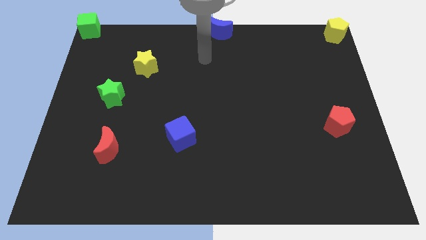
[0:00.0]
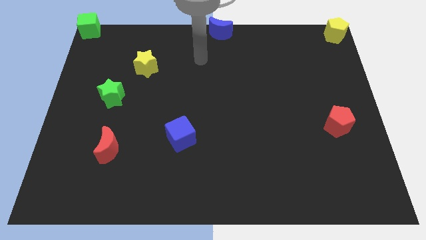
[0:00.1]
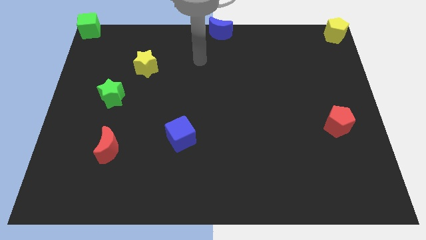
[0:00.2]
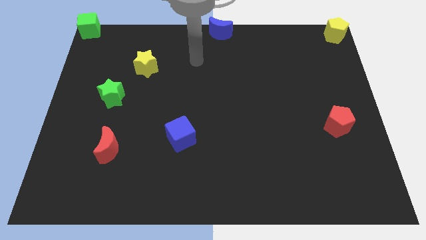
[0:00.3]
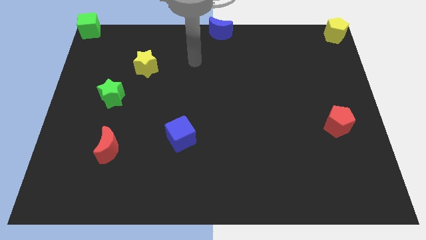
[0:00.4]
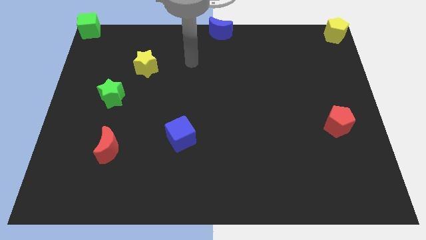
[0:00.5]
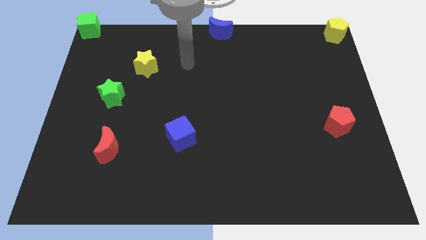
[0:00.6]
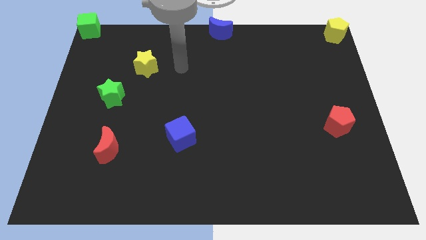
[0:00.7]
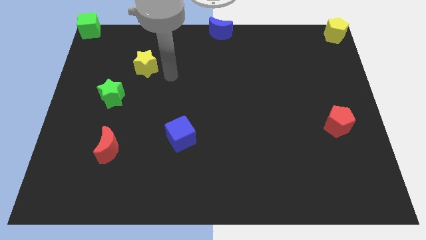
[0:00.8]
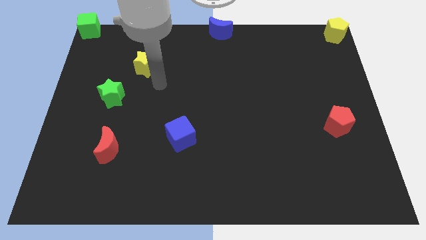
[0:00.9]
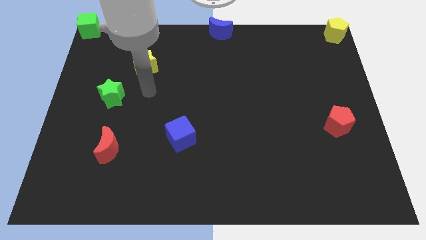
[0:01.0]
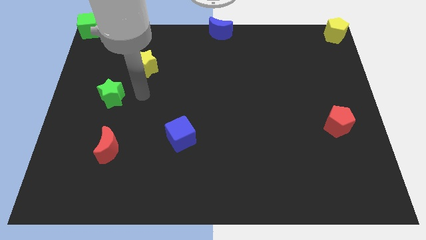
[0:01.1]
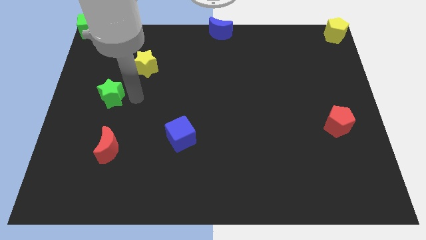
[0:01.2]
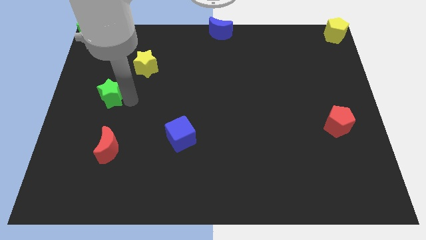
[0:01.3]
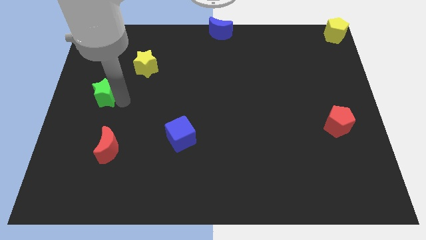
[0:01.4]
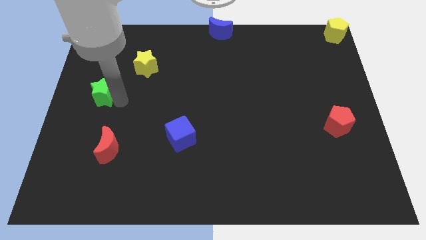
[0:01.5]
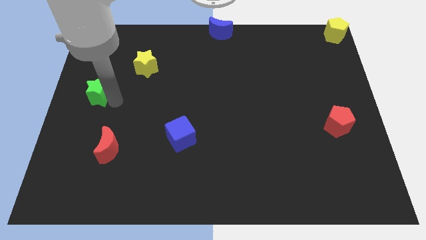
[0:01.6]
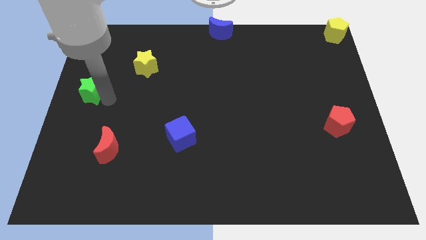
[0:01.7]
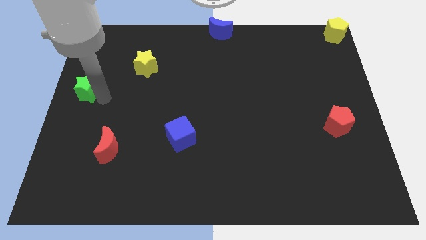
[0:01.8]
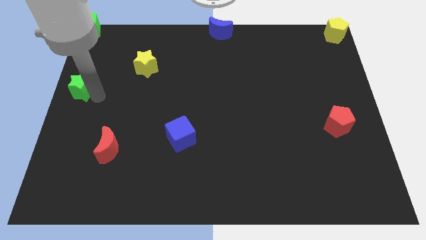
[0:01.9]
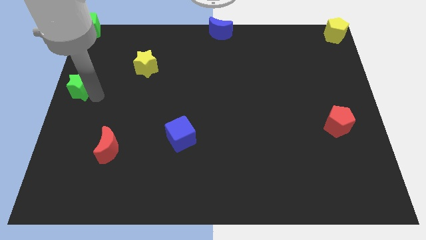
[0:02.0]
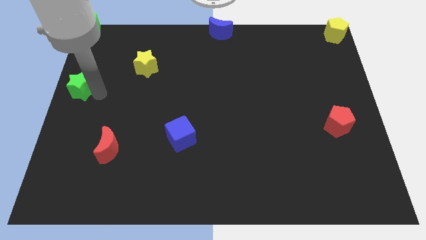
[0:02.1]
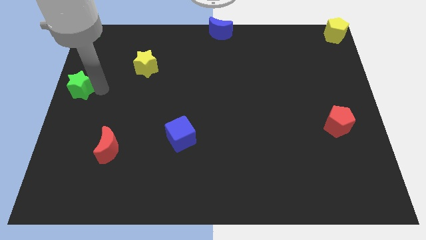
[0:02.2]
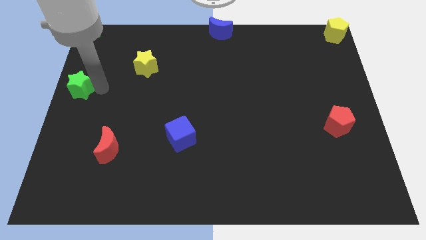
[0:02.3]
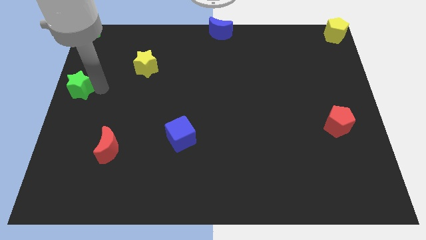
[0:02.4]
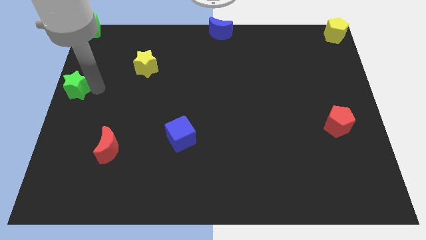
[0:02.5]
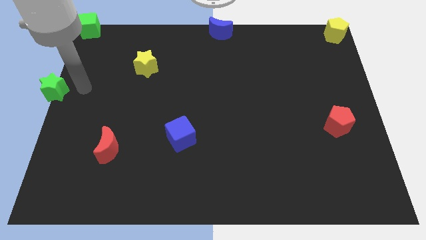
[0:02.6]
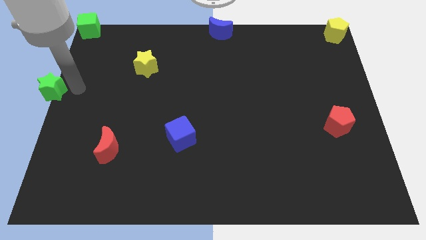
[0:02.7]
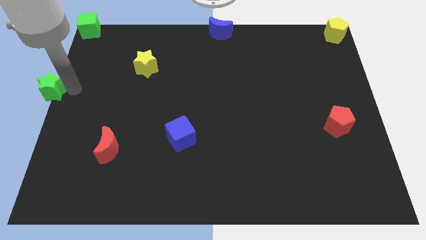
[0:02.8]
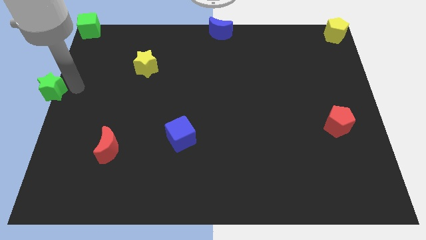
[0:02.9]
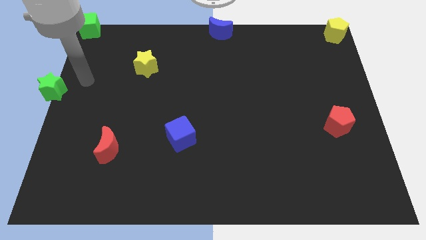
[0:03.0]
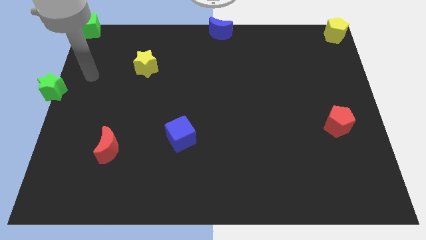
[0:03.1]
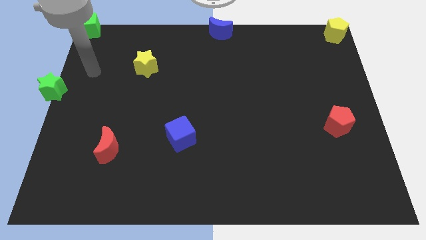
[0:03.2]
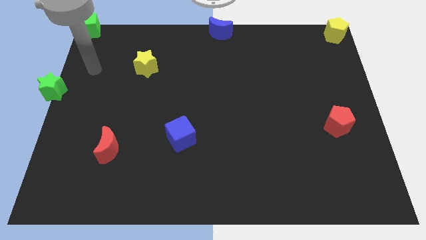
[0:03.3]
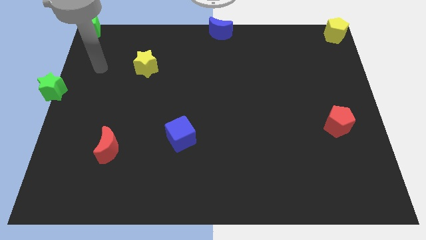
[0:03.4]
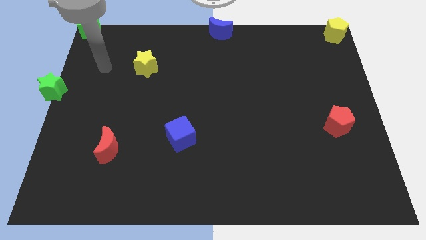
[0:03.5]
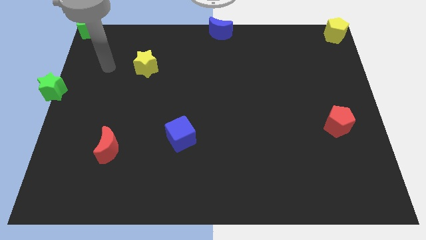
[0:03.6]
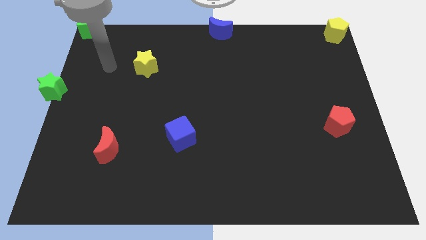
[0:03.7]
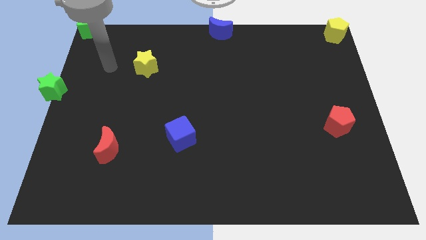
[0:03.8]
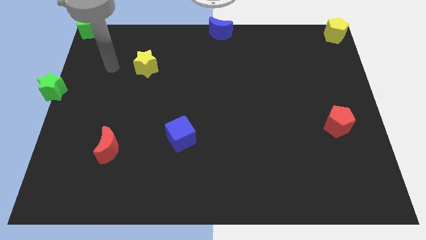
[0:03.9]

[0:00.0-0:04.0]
push the green star diagonally to the top left of the red moon

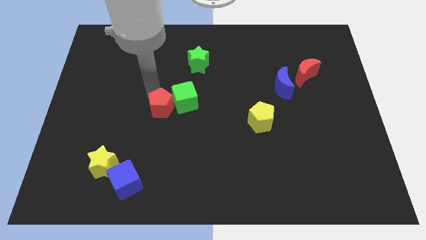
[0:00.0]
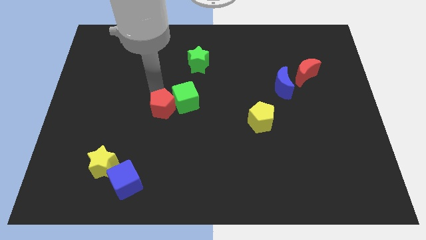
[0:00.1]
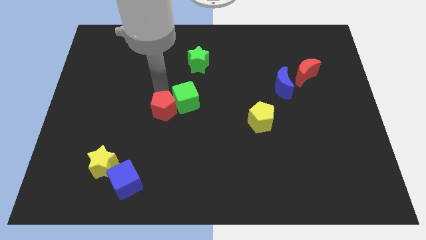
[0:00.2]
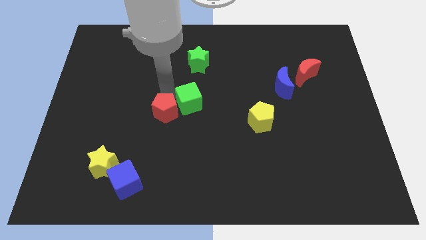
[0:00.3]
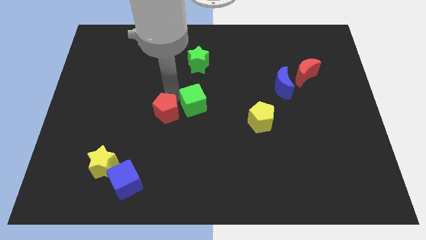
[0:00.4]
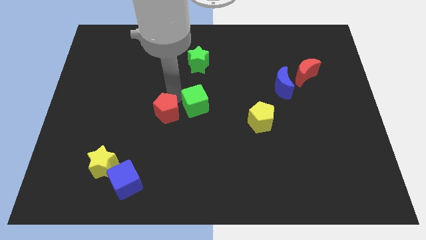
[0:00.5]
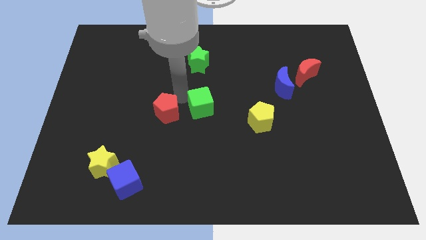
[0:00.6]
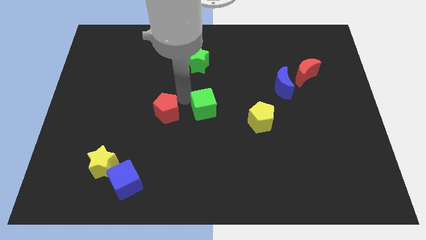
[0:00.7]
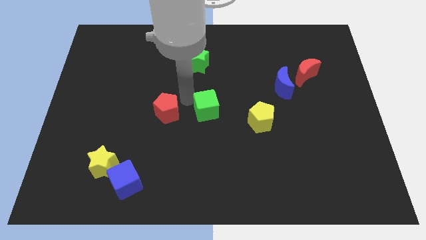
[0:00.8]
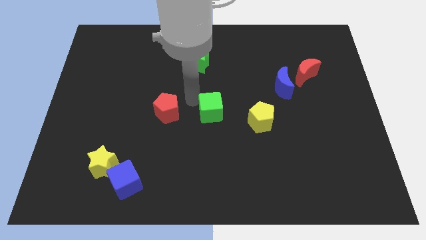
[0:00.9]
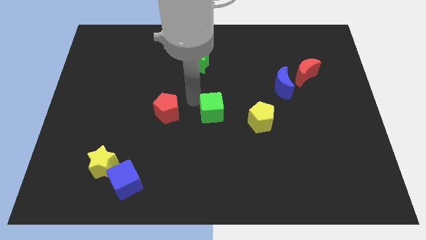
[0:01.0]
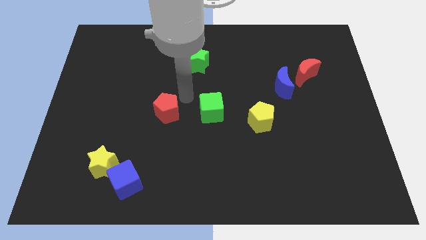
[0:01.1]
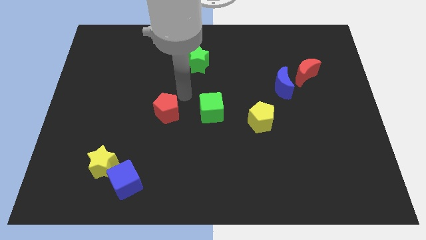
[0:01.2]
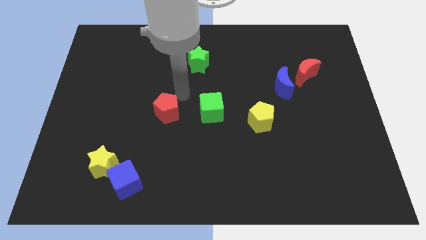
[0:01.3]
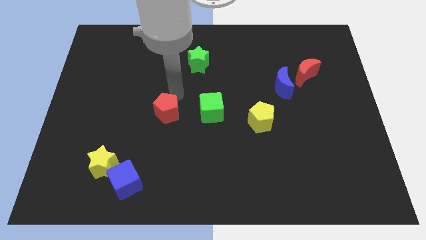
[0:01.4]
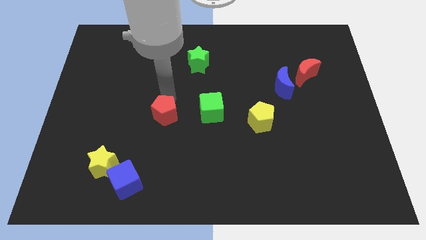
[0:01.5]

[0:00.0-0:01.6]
separate the green cube away from the red pentagon

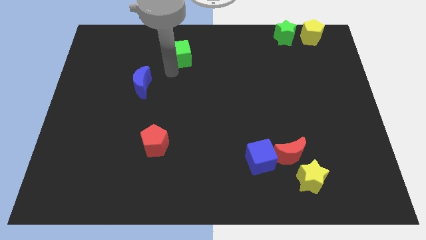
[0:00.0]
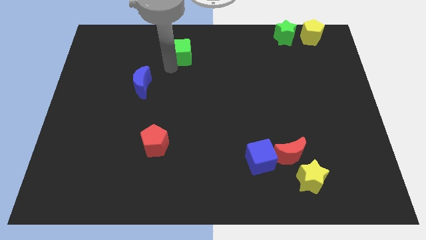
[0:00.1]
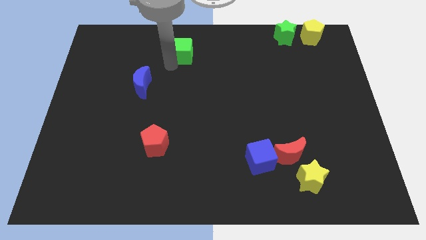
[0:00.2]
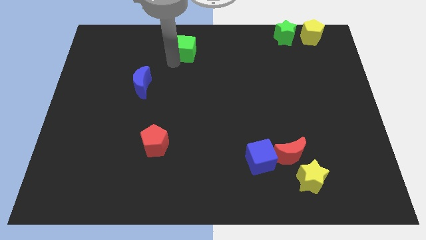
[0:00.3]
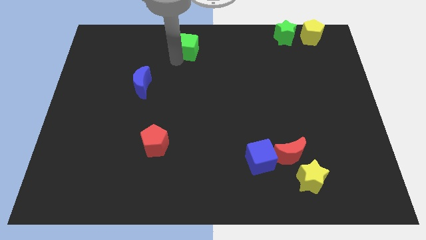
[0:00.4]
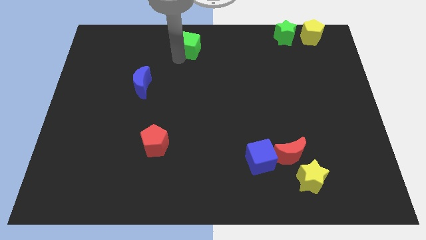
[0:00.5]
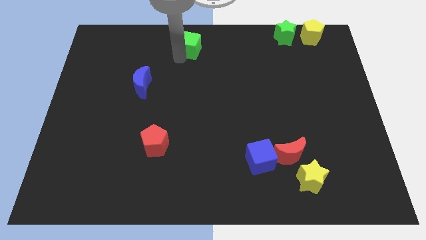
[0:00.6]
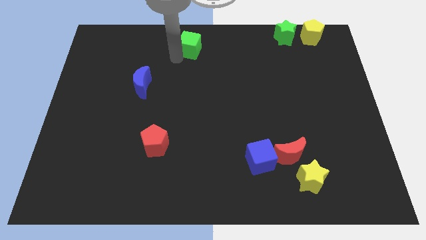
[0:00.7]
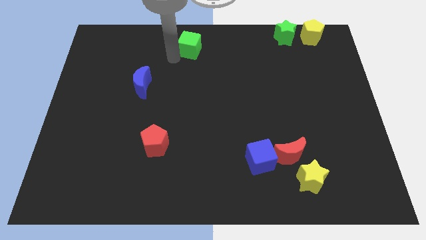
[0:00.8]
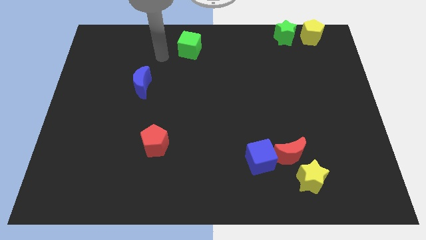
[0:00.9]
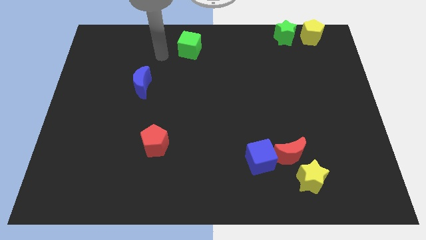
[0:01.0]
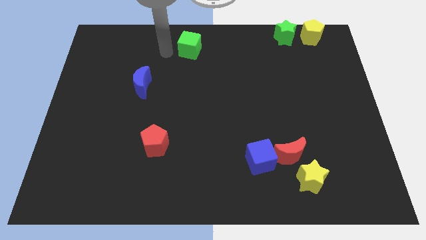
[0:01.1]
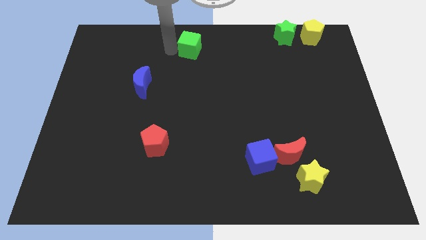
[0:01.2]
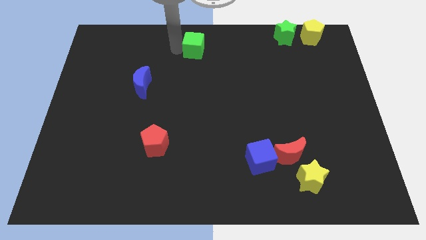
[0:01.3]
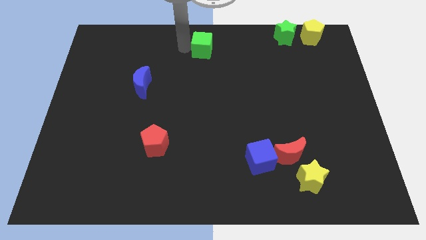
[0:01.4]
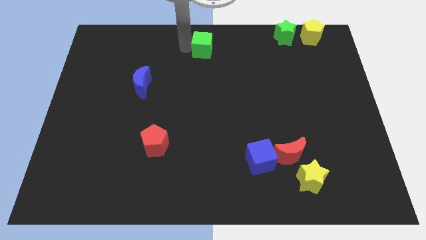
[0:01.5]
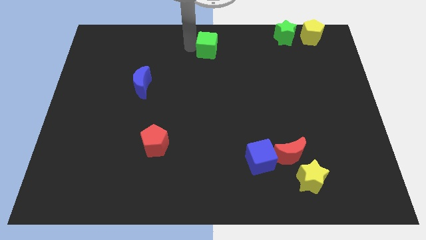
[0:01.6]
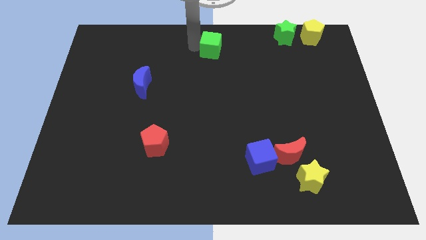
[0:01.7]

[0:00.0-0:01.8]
move green cube to the top center of the board

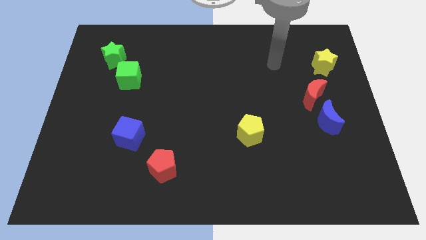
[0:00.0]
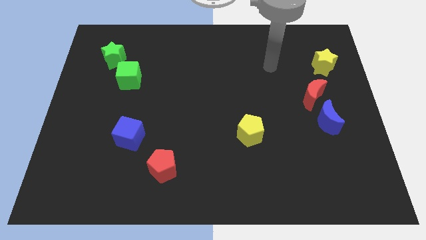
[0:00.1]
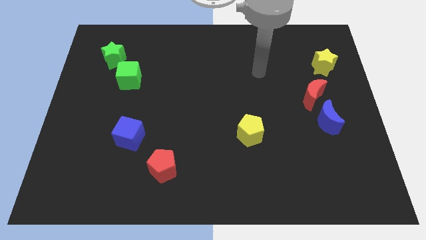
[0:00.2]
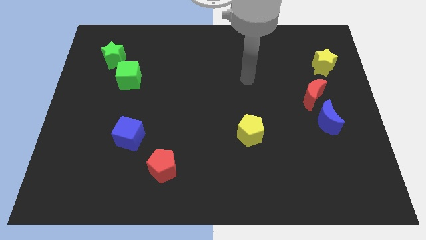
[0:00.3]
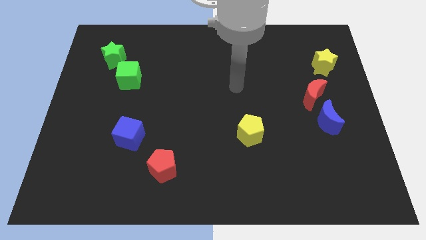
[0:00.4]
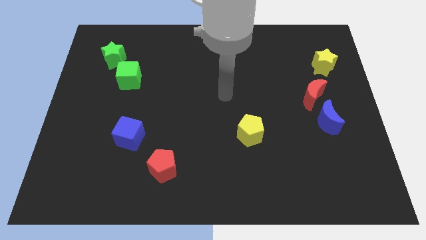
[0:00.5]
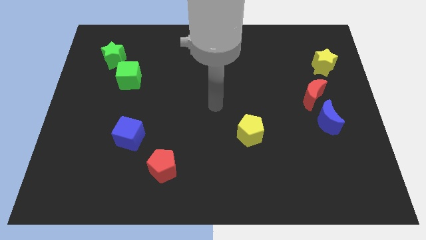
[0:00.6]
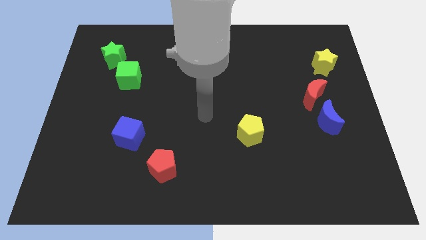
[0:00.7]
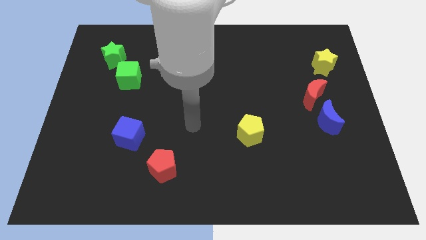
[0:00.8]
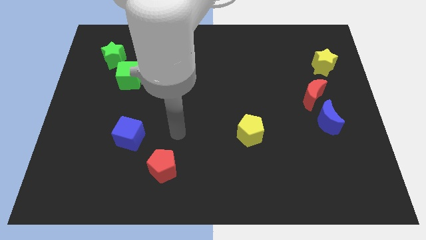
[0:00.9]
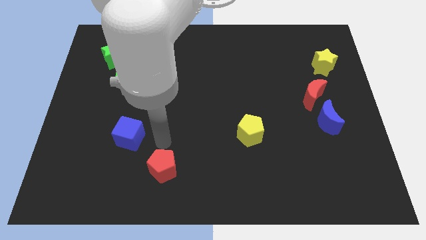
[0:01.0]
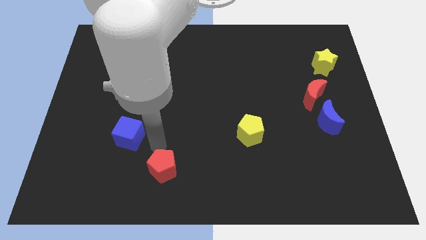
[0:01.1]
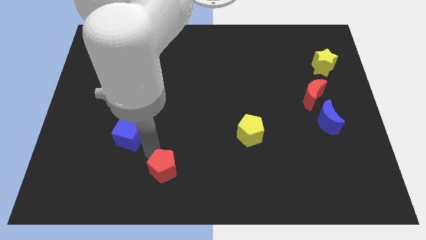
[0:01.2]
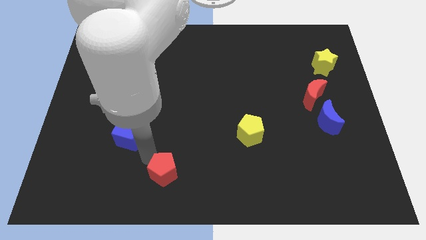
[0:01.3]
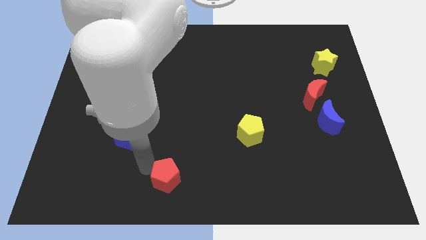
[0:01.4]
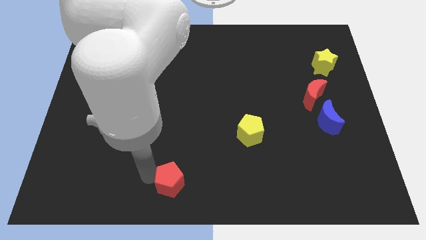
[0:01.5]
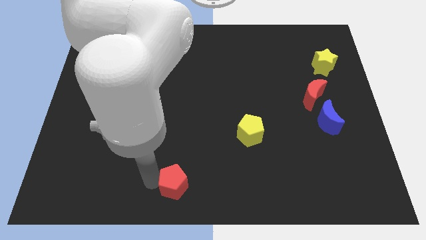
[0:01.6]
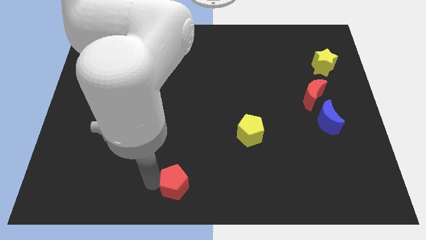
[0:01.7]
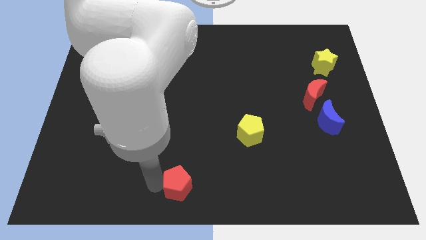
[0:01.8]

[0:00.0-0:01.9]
go and push the red pentagon to the bottom
